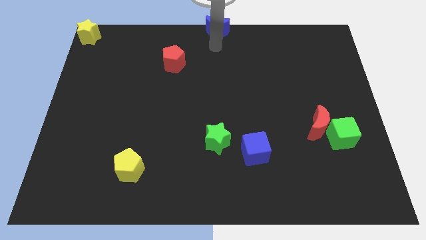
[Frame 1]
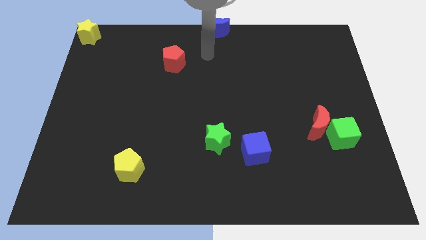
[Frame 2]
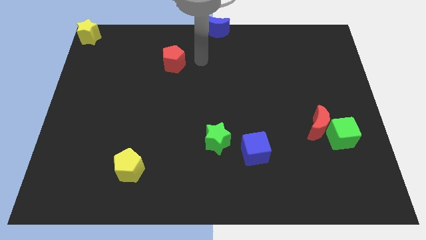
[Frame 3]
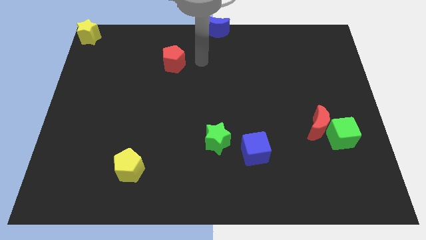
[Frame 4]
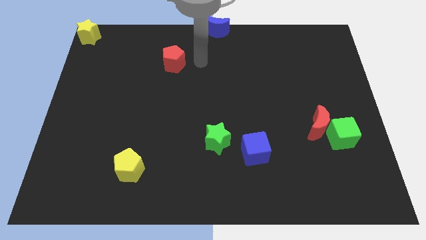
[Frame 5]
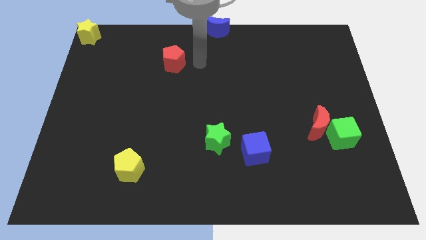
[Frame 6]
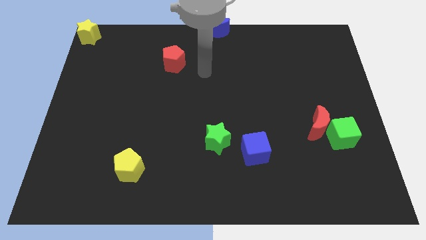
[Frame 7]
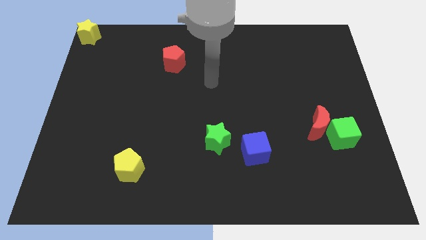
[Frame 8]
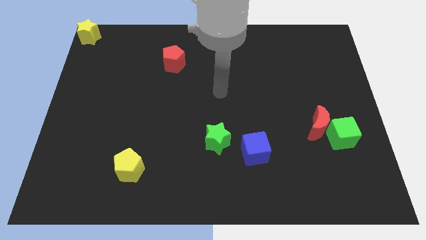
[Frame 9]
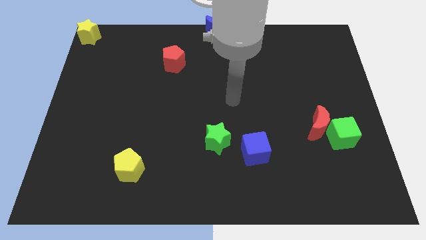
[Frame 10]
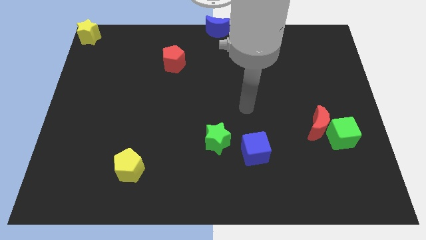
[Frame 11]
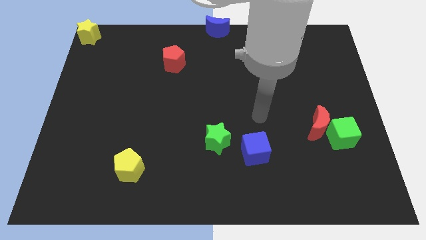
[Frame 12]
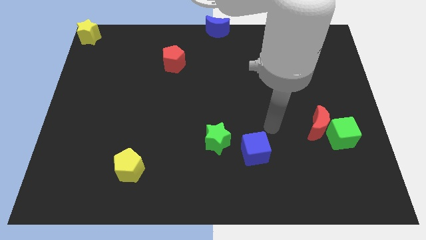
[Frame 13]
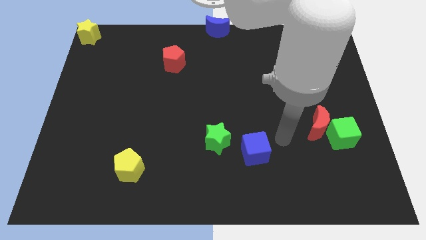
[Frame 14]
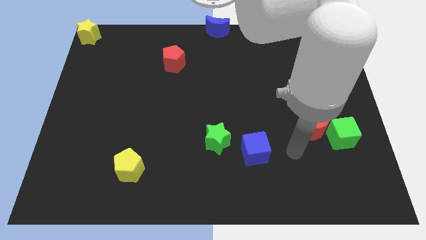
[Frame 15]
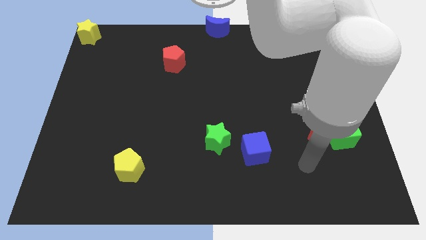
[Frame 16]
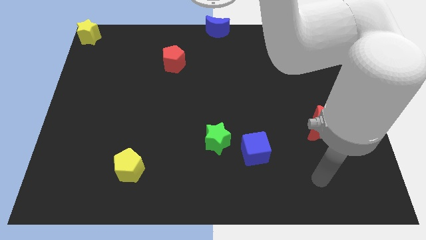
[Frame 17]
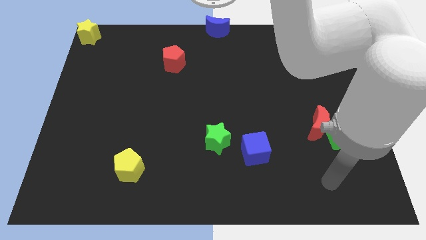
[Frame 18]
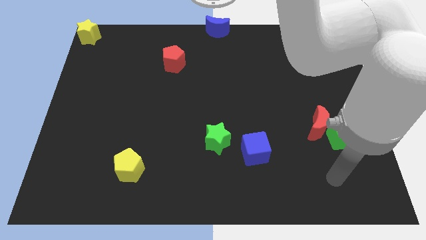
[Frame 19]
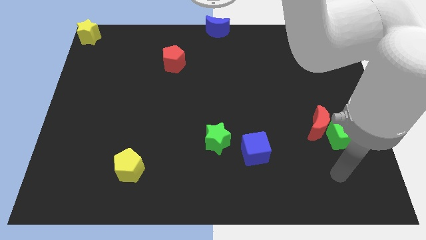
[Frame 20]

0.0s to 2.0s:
move away from the blue moon

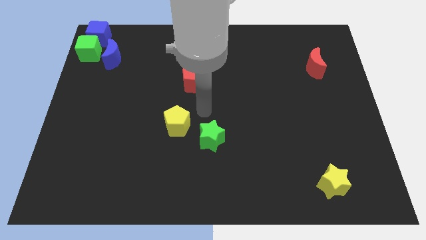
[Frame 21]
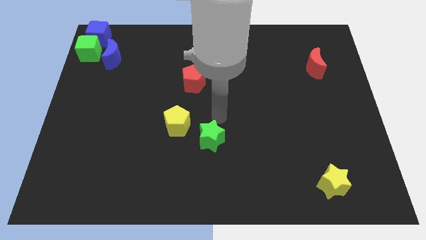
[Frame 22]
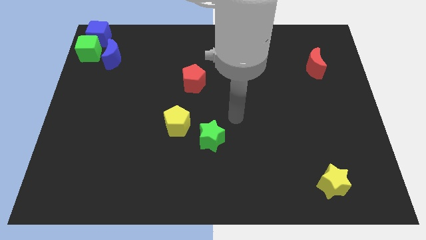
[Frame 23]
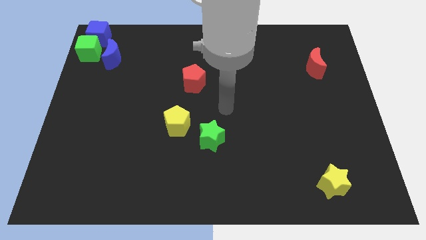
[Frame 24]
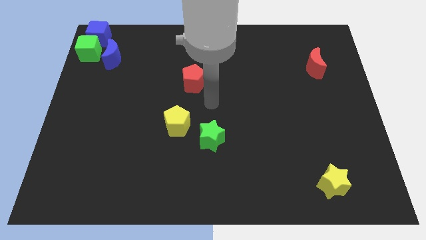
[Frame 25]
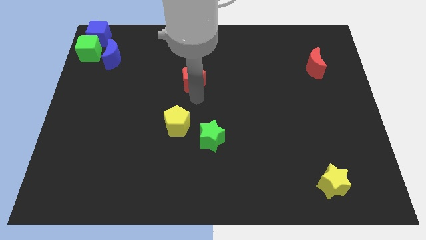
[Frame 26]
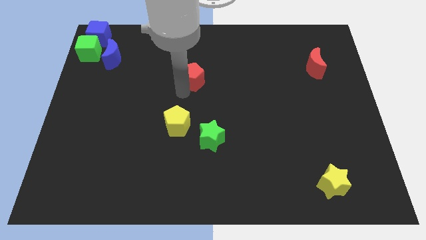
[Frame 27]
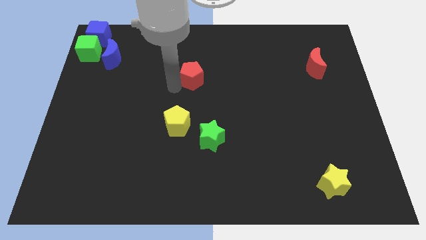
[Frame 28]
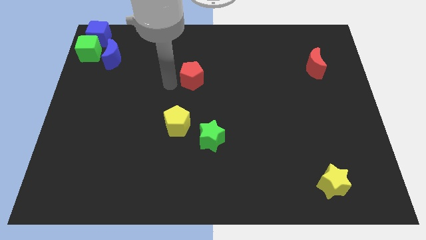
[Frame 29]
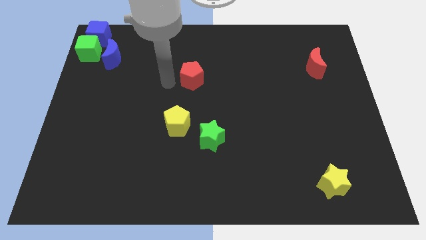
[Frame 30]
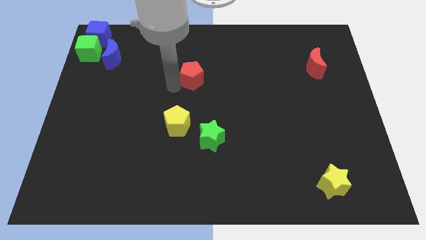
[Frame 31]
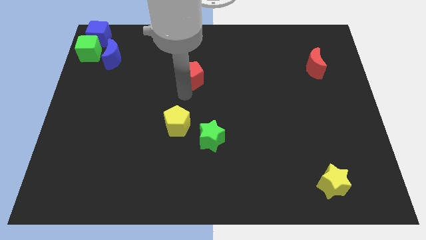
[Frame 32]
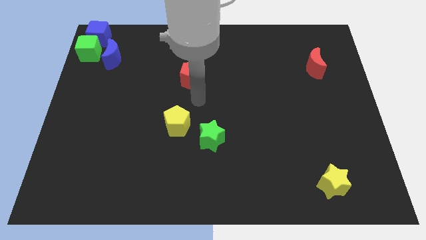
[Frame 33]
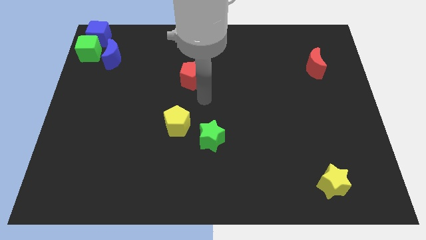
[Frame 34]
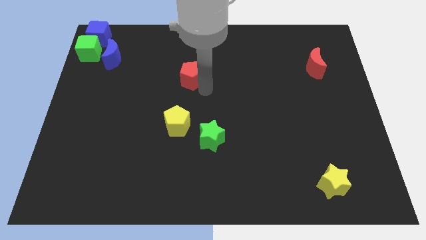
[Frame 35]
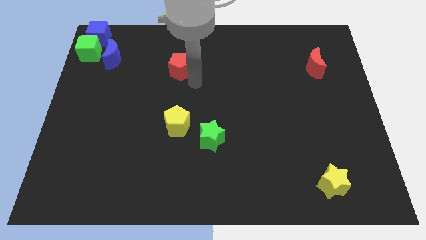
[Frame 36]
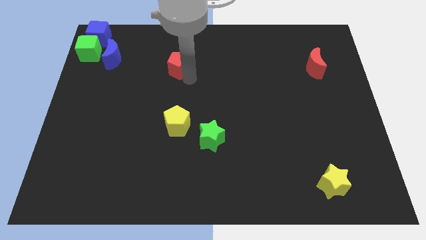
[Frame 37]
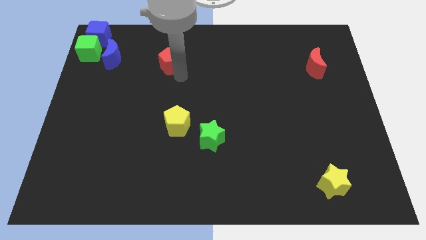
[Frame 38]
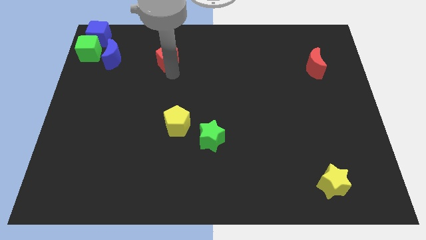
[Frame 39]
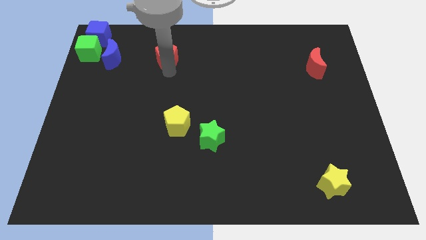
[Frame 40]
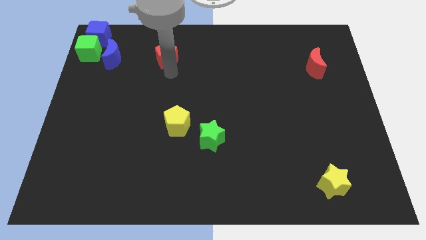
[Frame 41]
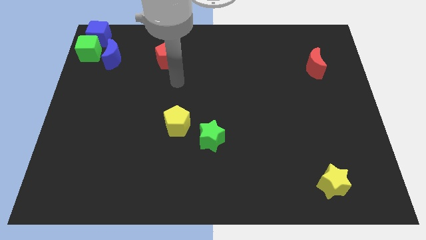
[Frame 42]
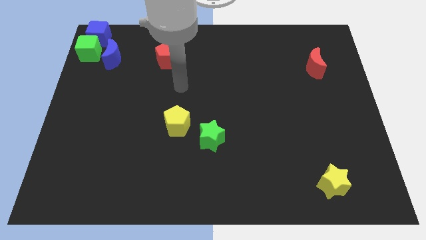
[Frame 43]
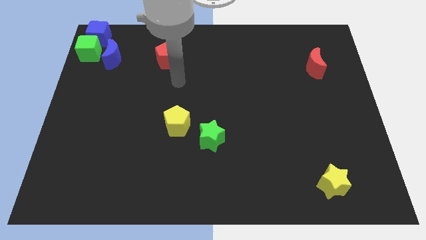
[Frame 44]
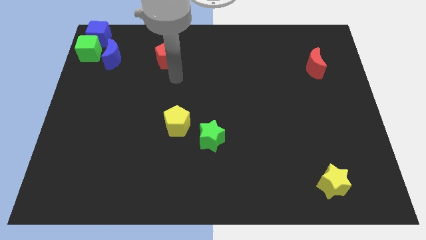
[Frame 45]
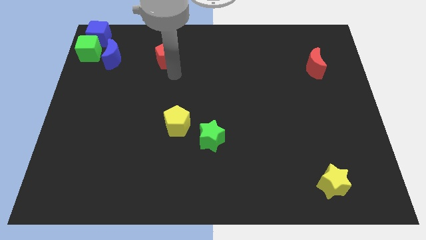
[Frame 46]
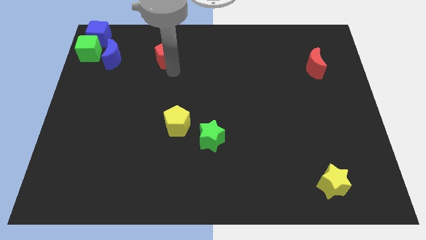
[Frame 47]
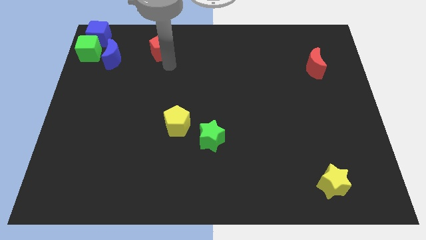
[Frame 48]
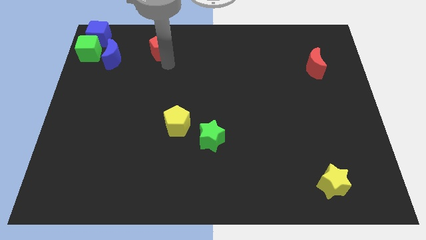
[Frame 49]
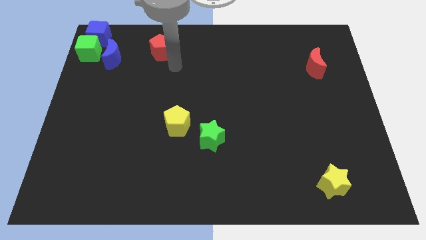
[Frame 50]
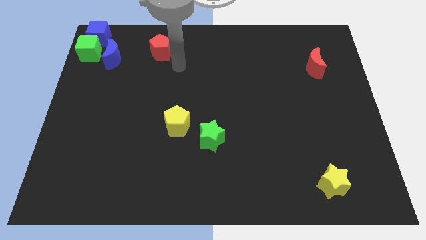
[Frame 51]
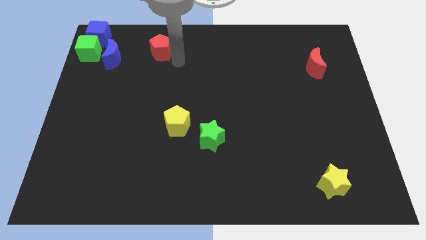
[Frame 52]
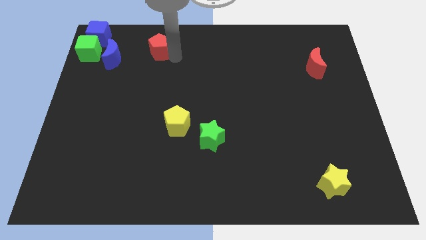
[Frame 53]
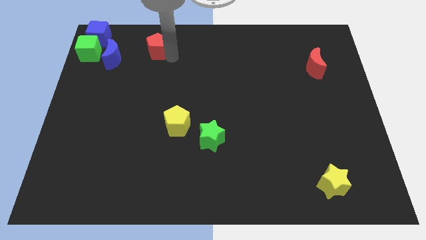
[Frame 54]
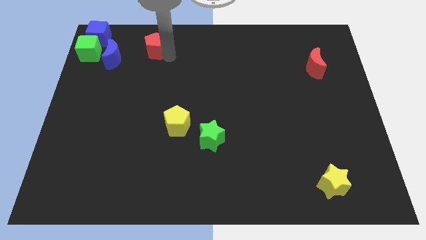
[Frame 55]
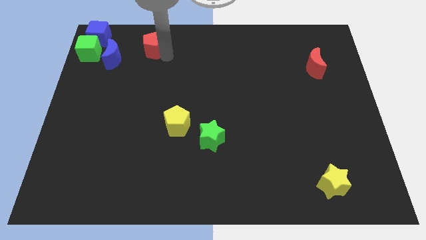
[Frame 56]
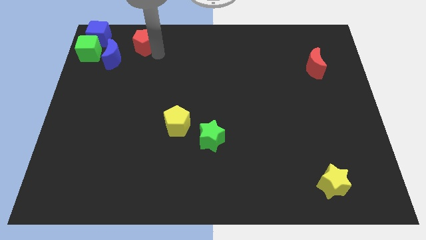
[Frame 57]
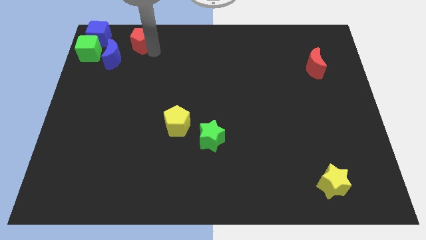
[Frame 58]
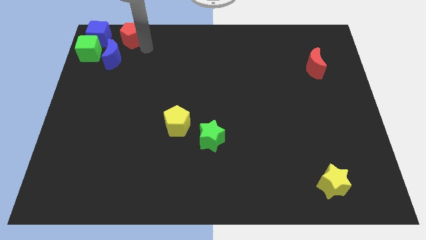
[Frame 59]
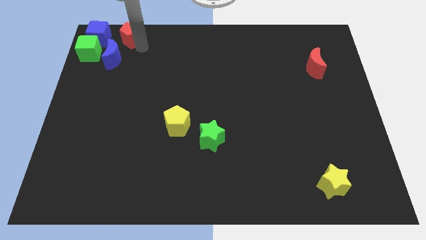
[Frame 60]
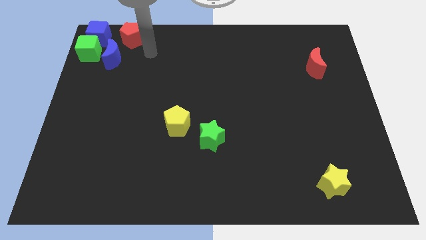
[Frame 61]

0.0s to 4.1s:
push red pentagon up to the right of blue cube

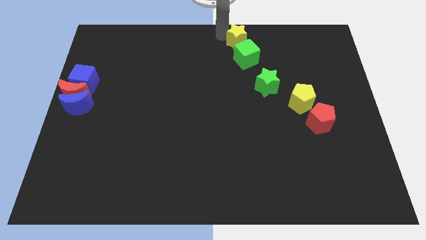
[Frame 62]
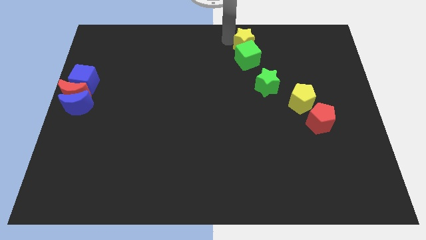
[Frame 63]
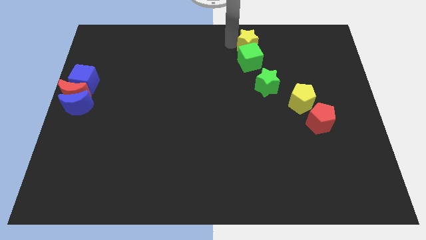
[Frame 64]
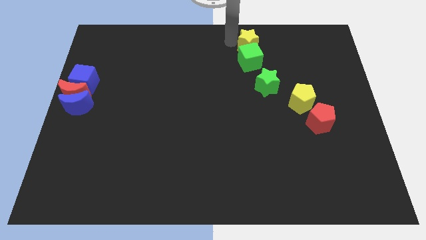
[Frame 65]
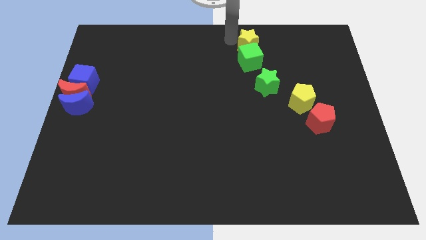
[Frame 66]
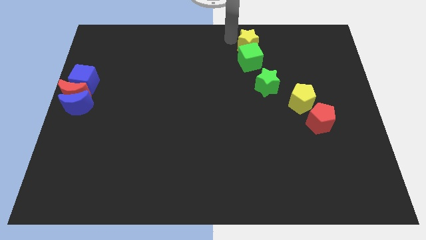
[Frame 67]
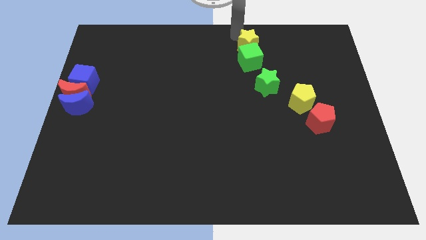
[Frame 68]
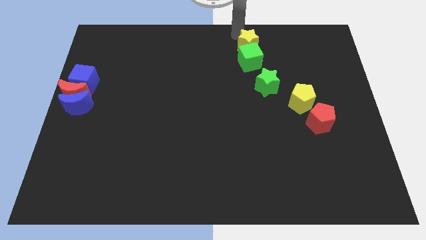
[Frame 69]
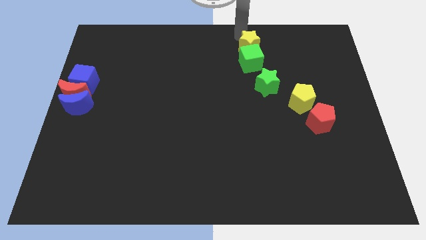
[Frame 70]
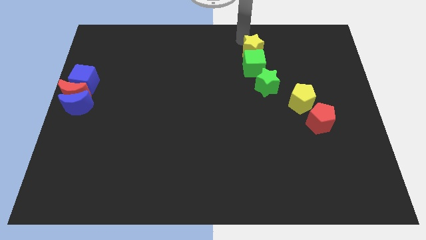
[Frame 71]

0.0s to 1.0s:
move yellow star into green cube

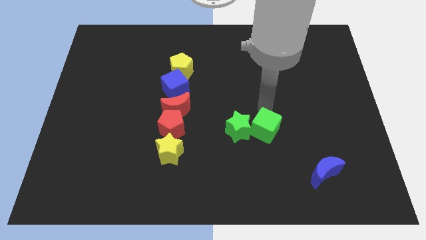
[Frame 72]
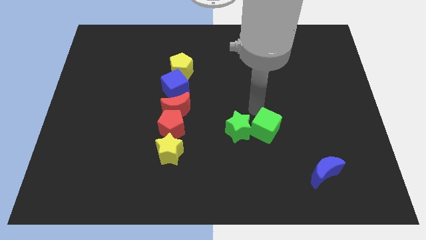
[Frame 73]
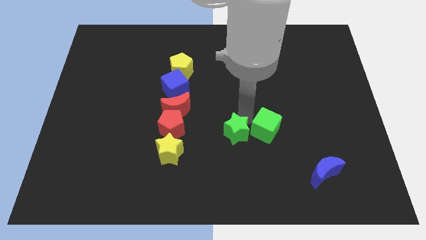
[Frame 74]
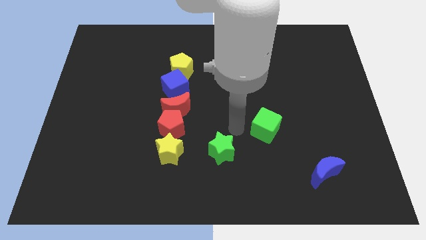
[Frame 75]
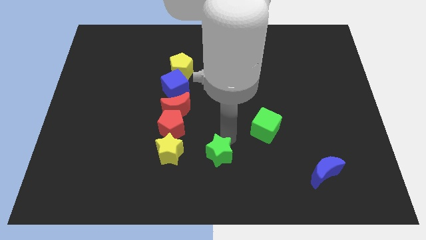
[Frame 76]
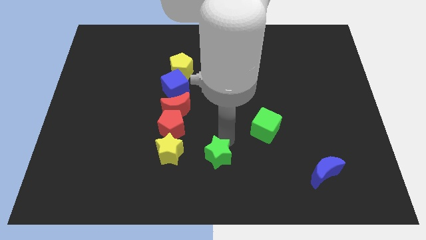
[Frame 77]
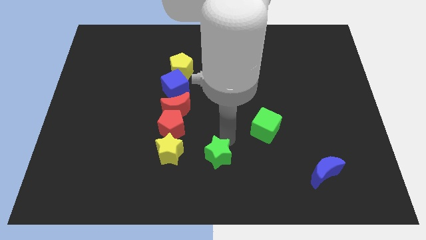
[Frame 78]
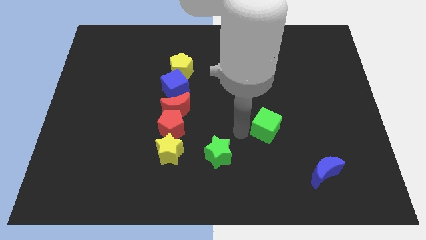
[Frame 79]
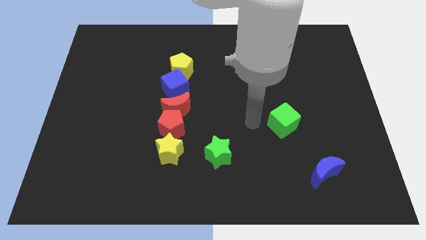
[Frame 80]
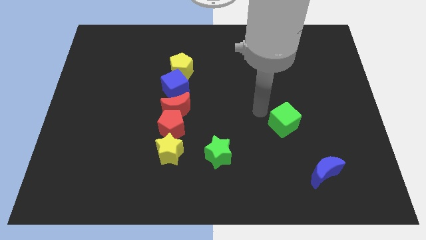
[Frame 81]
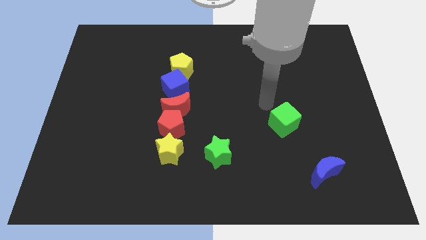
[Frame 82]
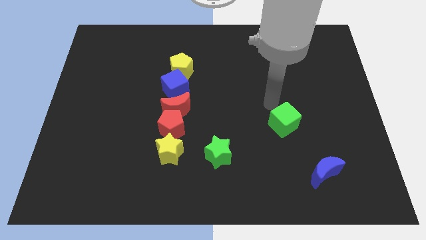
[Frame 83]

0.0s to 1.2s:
separate the green star and the green cube

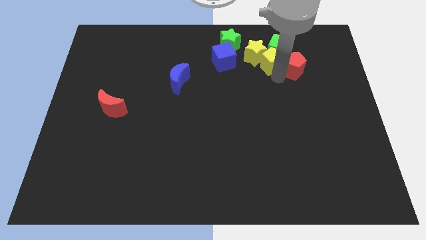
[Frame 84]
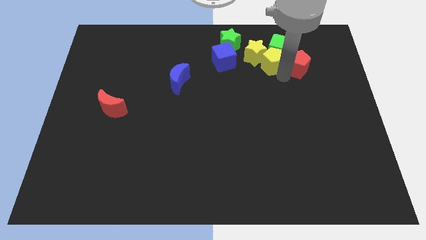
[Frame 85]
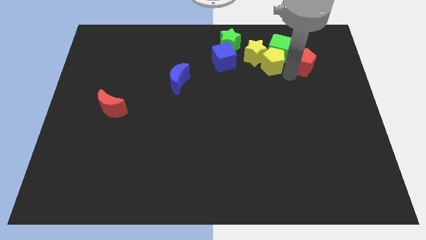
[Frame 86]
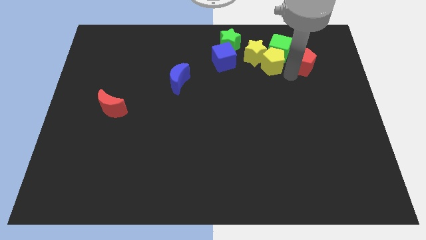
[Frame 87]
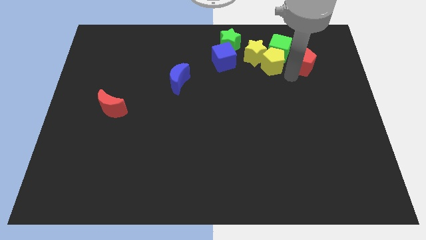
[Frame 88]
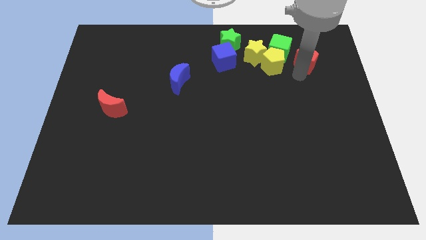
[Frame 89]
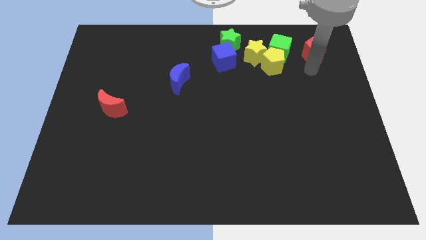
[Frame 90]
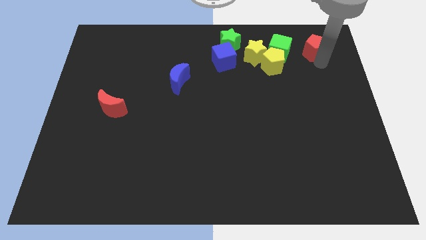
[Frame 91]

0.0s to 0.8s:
separate red pentagon from yellow pentagon
